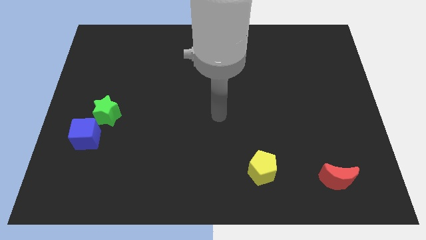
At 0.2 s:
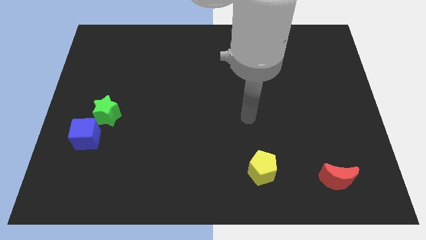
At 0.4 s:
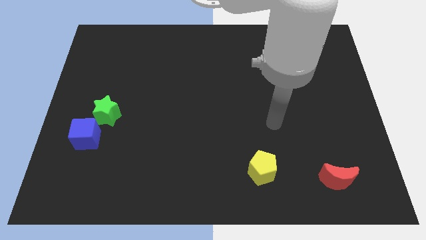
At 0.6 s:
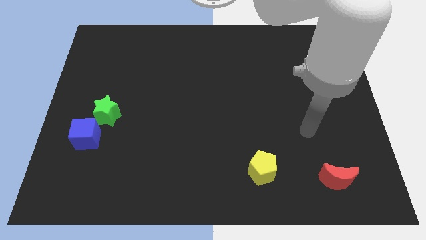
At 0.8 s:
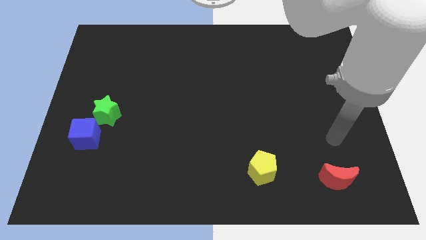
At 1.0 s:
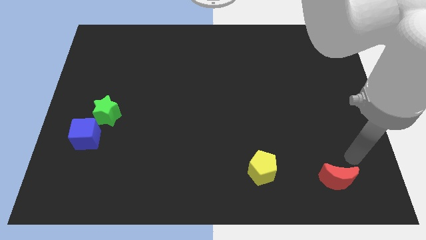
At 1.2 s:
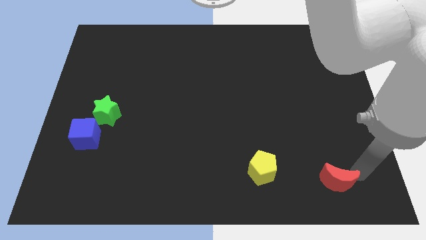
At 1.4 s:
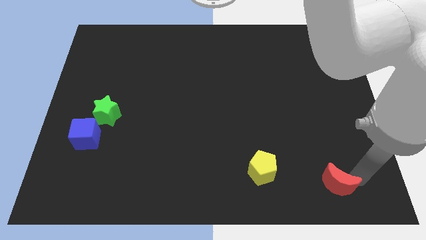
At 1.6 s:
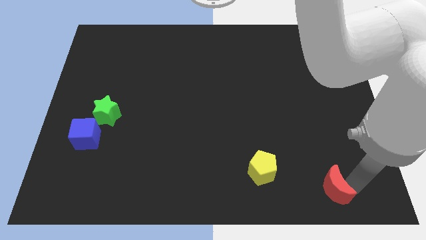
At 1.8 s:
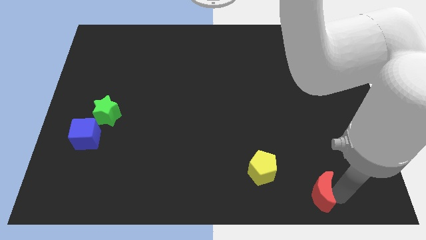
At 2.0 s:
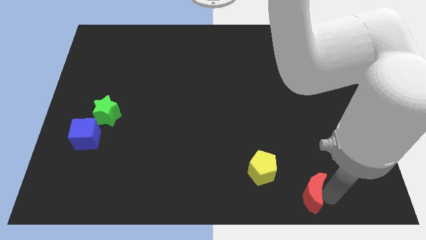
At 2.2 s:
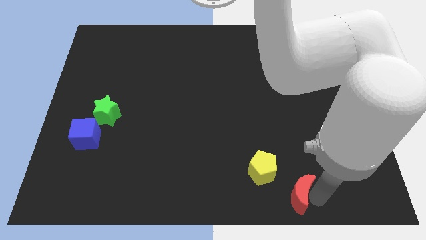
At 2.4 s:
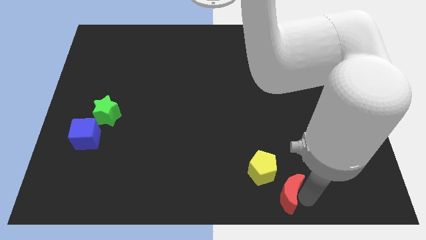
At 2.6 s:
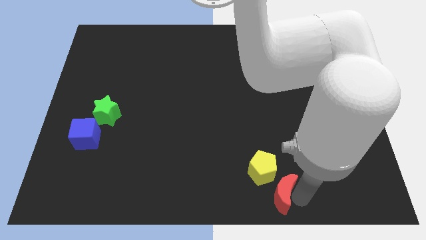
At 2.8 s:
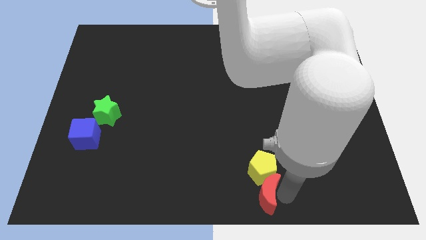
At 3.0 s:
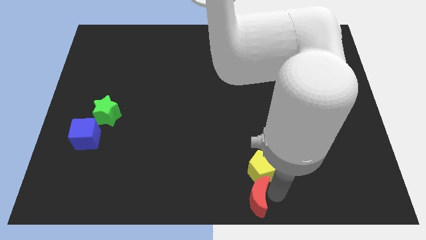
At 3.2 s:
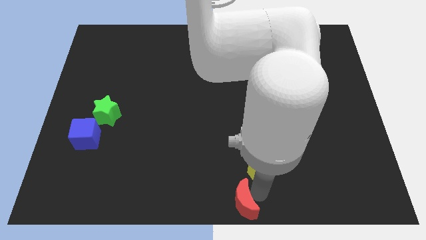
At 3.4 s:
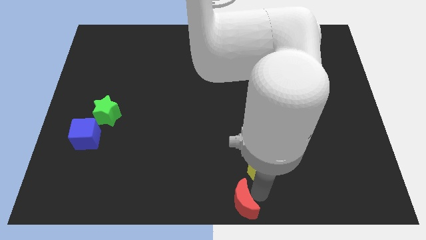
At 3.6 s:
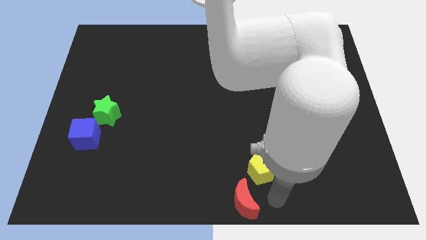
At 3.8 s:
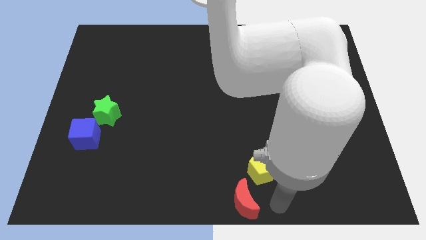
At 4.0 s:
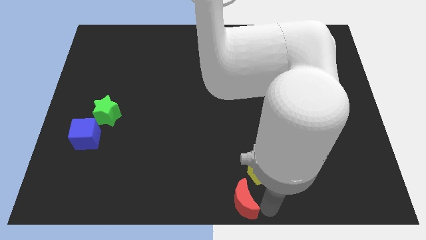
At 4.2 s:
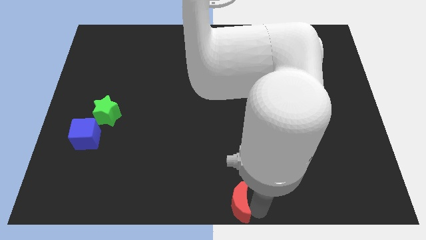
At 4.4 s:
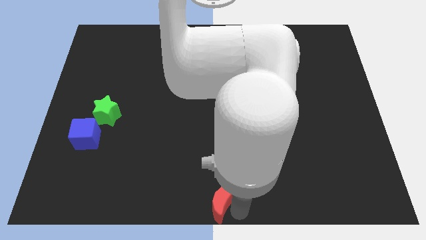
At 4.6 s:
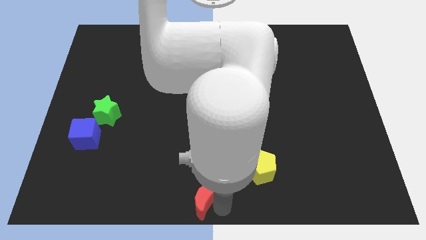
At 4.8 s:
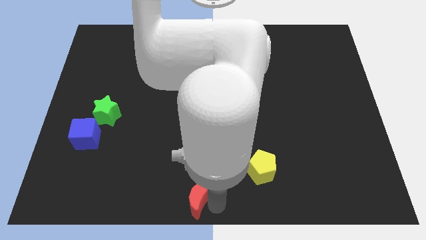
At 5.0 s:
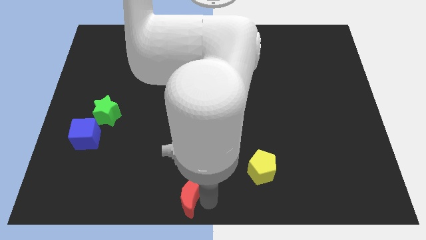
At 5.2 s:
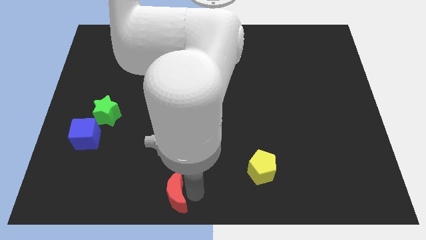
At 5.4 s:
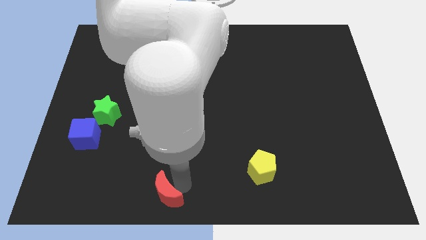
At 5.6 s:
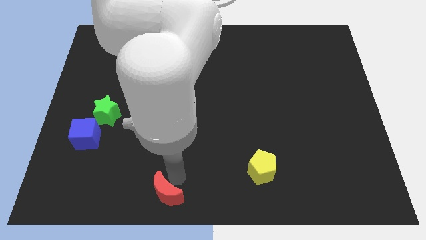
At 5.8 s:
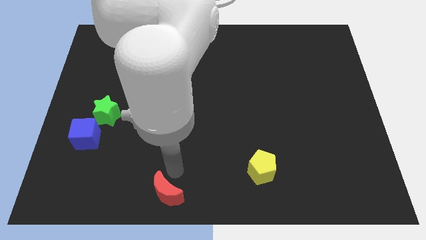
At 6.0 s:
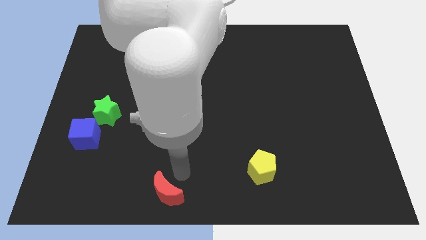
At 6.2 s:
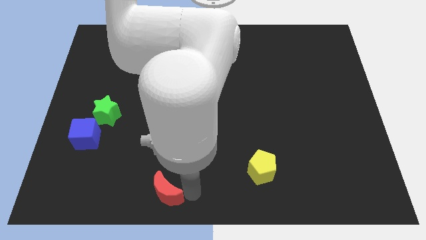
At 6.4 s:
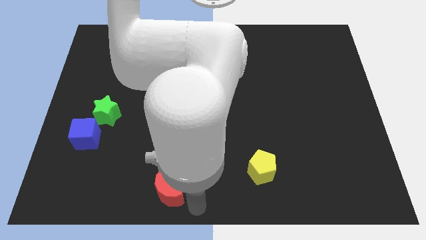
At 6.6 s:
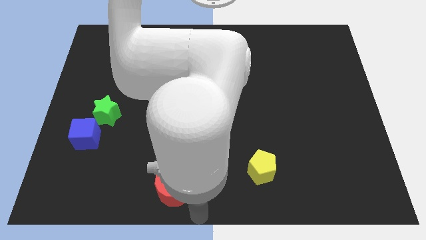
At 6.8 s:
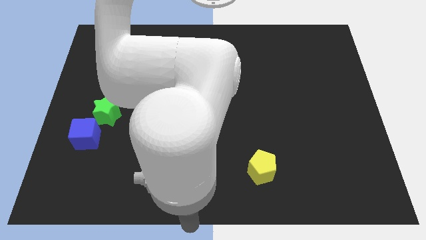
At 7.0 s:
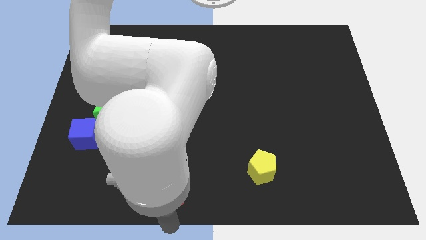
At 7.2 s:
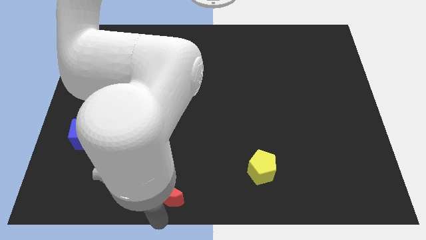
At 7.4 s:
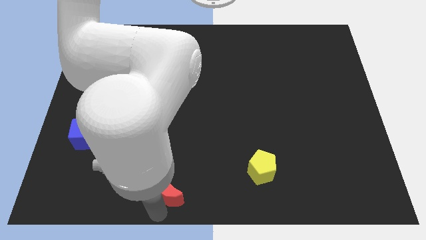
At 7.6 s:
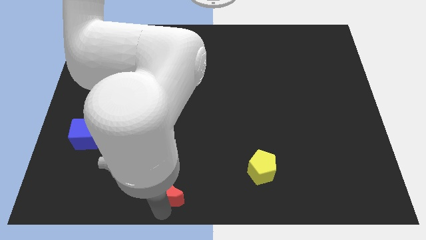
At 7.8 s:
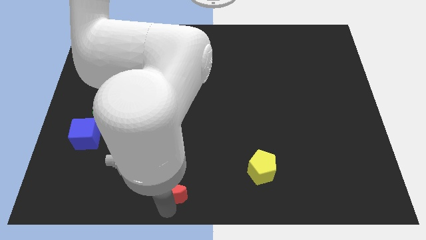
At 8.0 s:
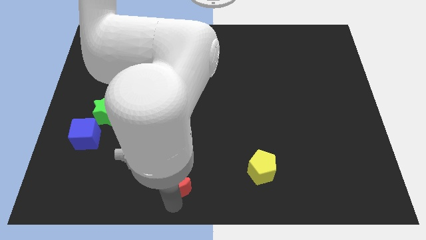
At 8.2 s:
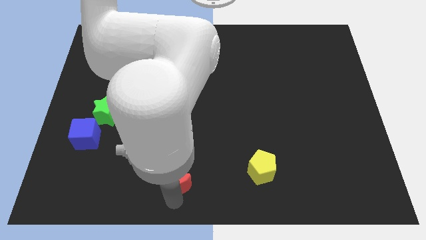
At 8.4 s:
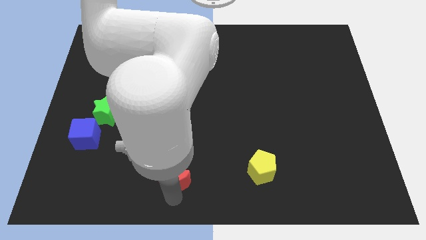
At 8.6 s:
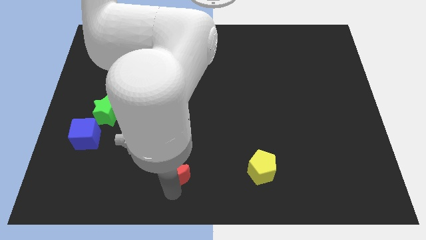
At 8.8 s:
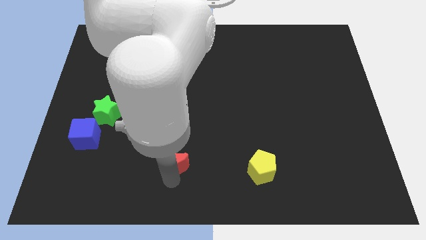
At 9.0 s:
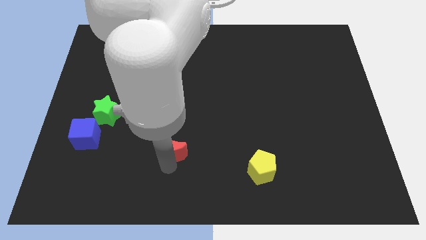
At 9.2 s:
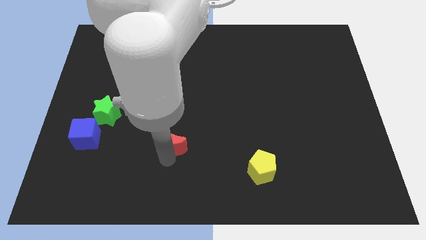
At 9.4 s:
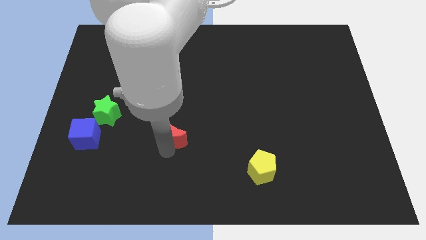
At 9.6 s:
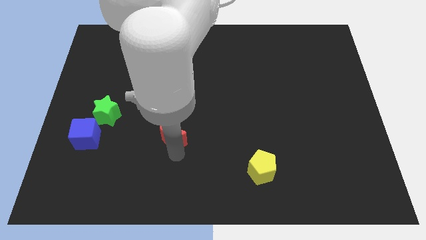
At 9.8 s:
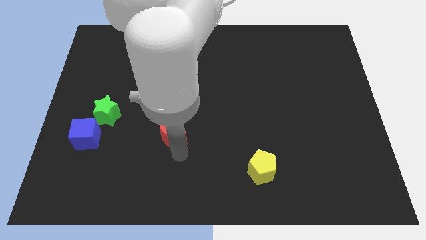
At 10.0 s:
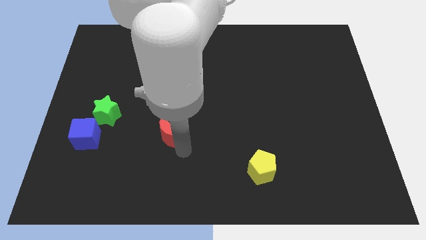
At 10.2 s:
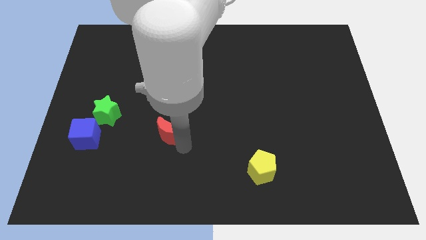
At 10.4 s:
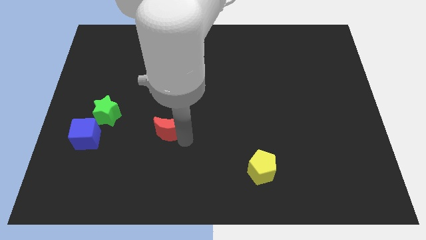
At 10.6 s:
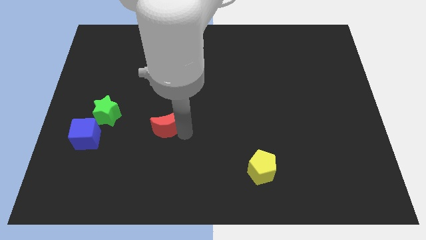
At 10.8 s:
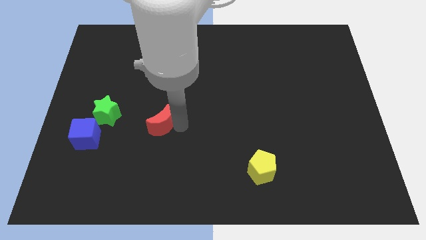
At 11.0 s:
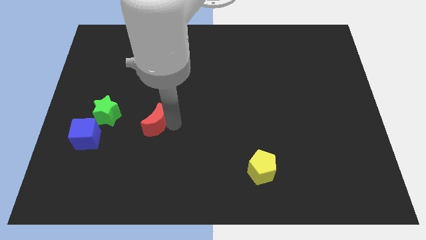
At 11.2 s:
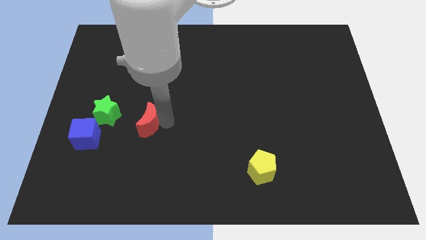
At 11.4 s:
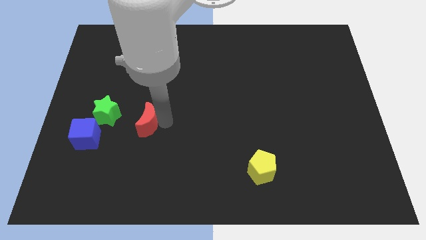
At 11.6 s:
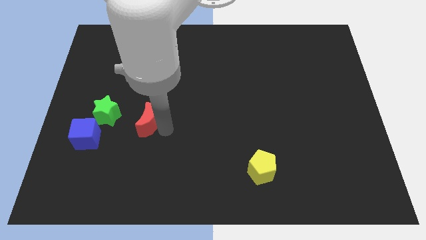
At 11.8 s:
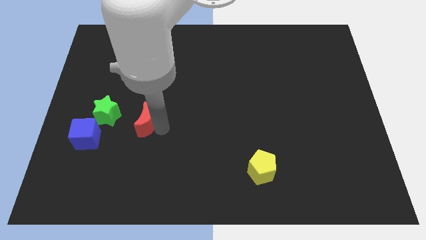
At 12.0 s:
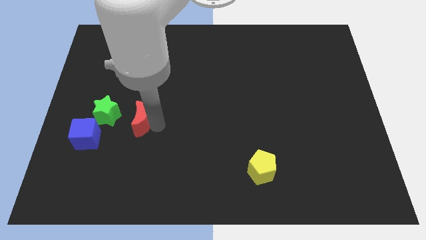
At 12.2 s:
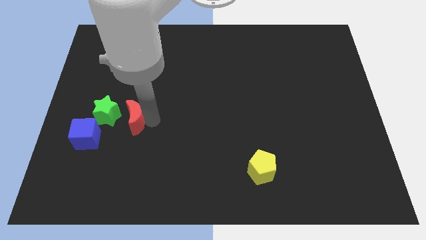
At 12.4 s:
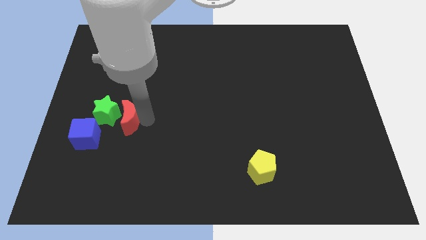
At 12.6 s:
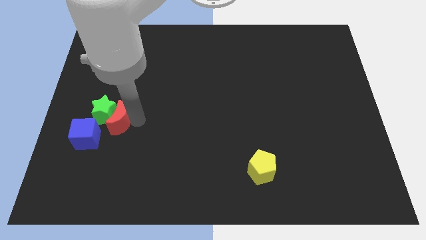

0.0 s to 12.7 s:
move the red moon towards the green block

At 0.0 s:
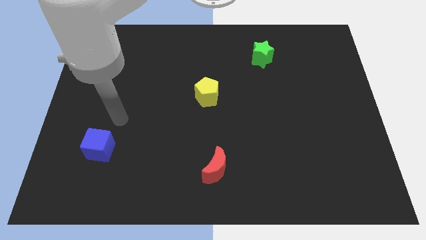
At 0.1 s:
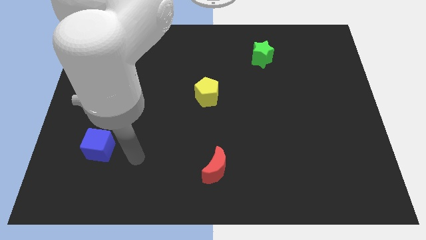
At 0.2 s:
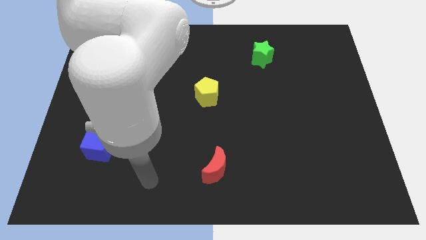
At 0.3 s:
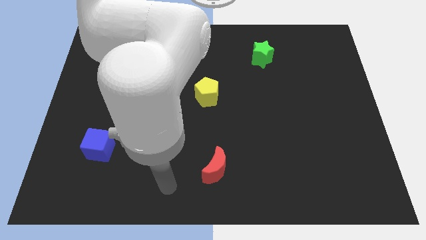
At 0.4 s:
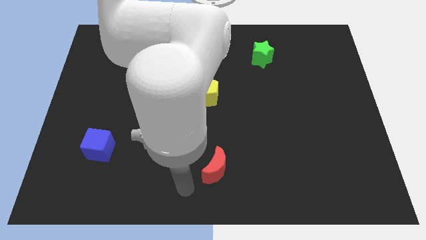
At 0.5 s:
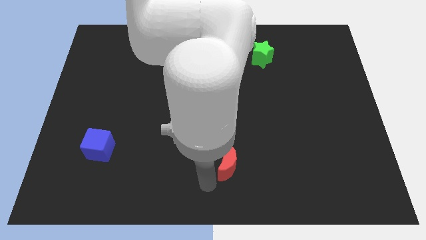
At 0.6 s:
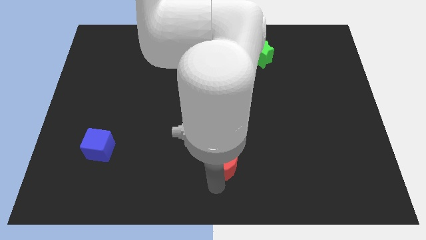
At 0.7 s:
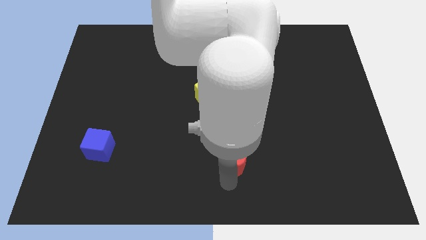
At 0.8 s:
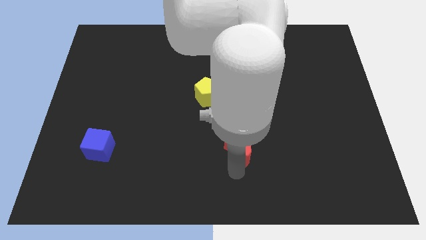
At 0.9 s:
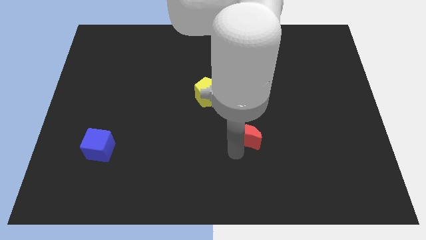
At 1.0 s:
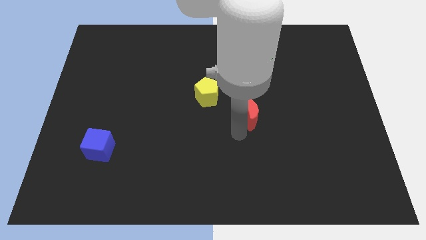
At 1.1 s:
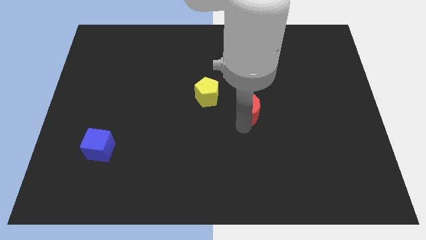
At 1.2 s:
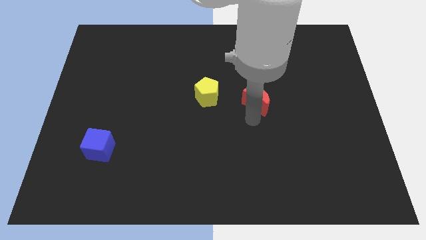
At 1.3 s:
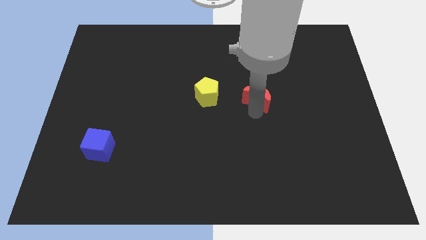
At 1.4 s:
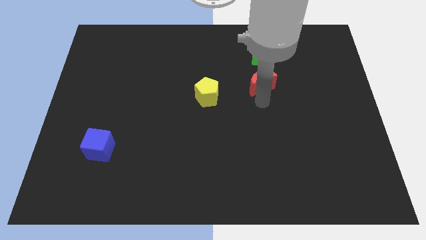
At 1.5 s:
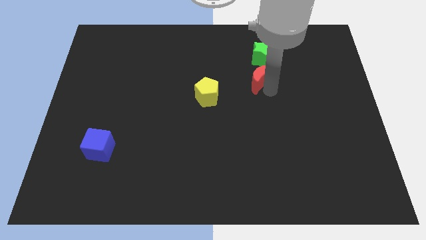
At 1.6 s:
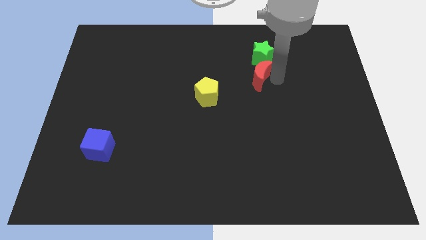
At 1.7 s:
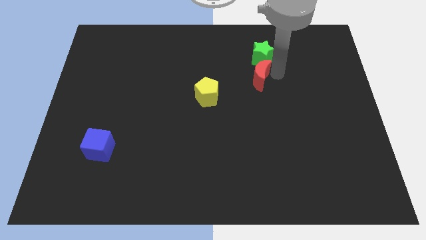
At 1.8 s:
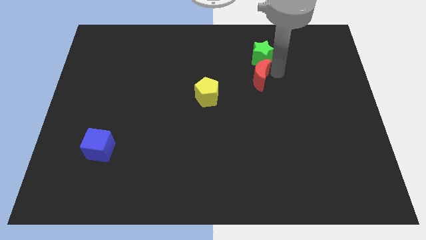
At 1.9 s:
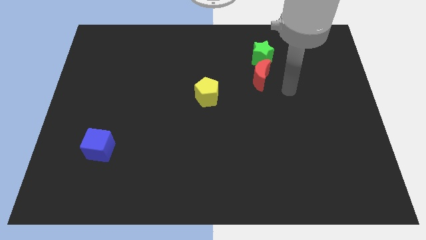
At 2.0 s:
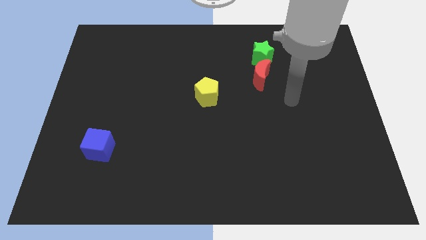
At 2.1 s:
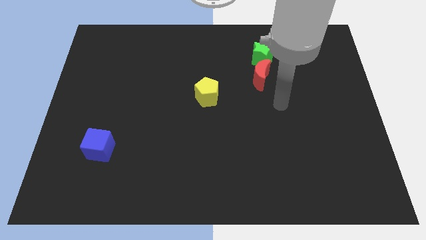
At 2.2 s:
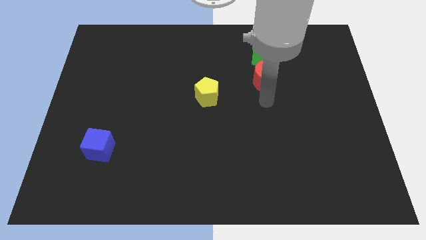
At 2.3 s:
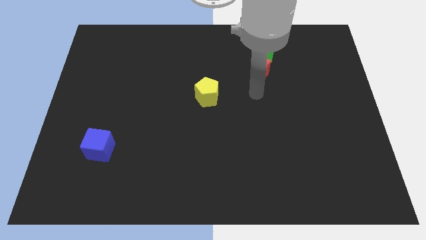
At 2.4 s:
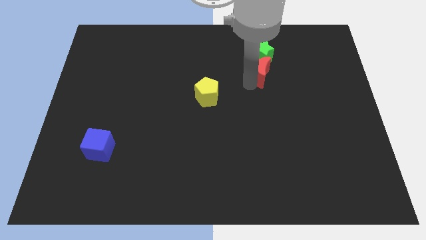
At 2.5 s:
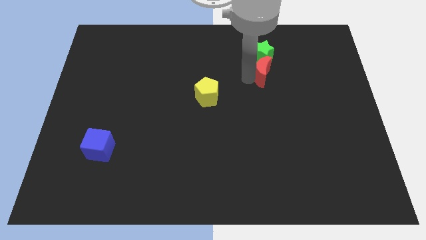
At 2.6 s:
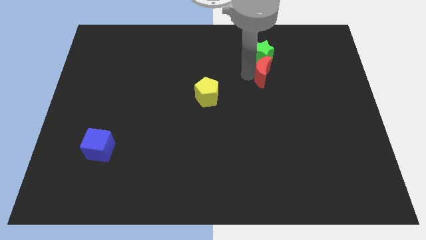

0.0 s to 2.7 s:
slide the red moon towards the green star
